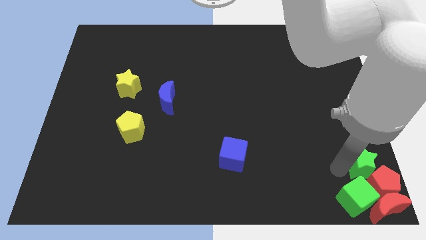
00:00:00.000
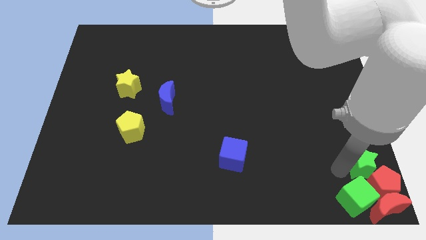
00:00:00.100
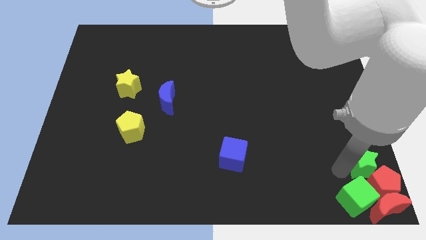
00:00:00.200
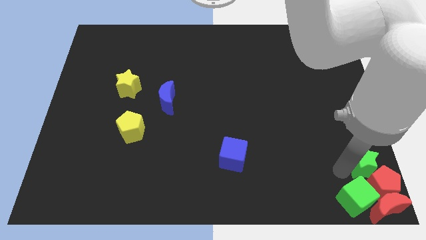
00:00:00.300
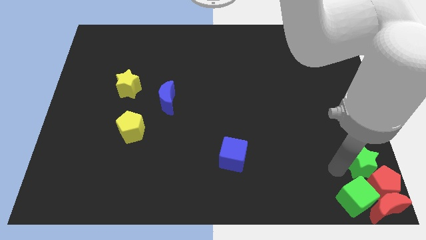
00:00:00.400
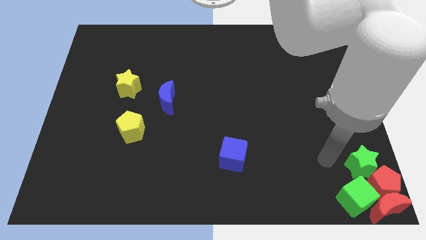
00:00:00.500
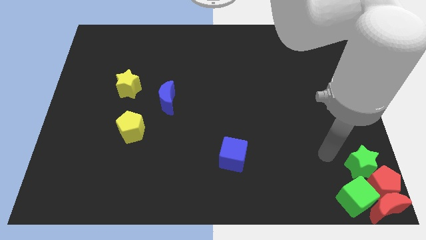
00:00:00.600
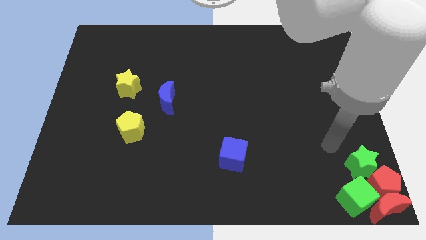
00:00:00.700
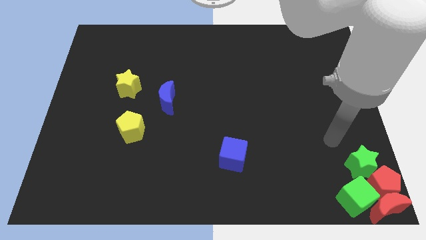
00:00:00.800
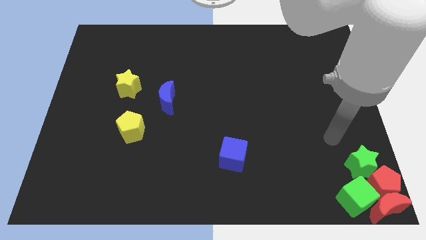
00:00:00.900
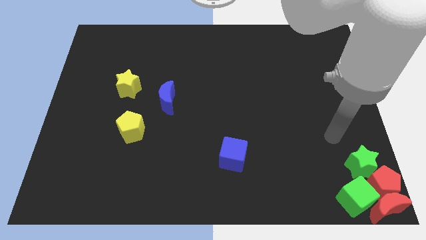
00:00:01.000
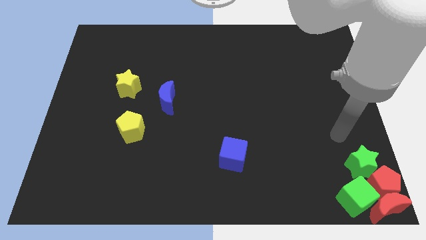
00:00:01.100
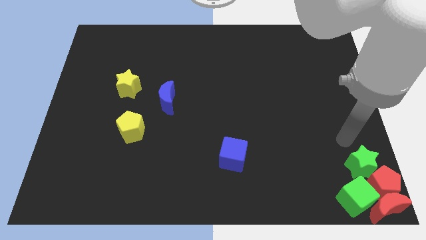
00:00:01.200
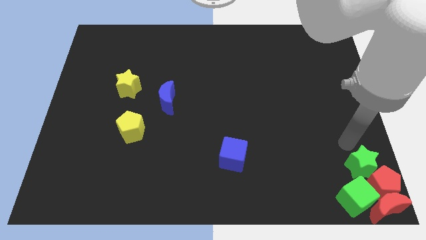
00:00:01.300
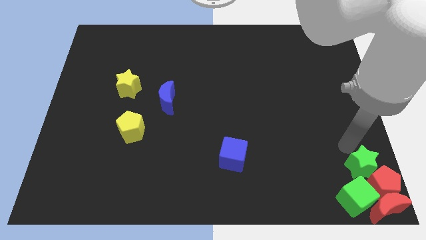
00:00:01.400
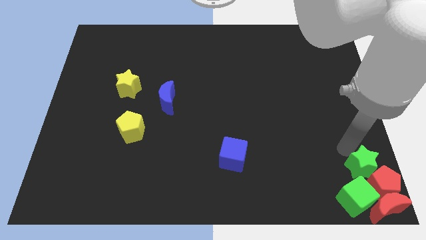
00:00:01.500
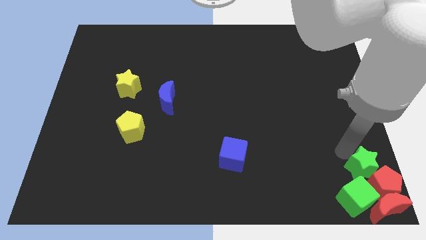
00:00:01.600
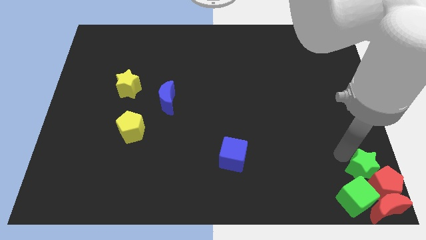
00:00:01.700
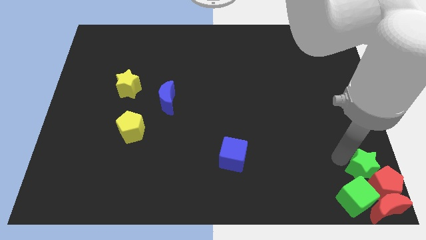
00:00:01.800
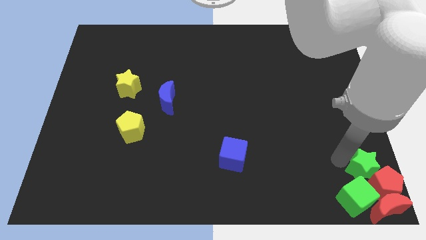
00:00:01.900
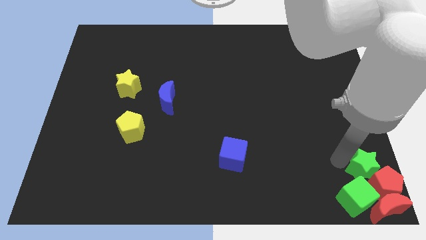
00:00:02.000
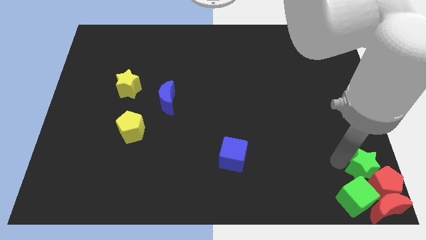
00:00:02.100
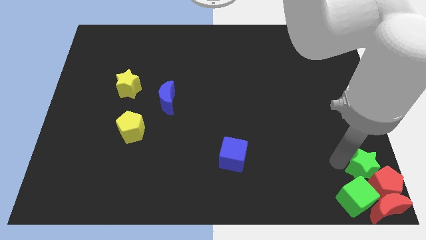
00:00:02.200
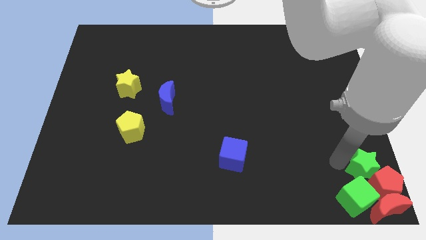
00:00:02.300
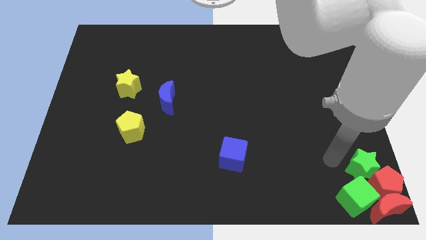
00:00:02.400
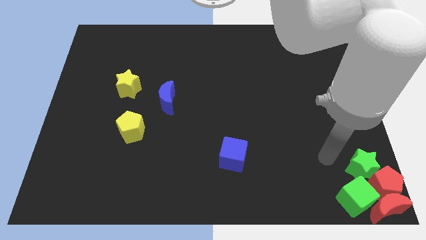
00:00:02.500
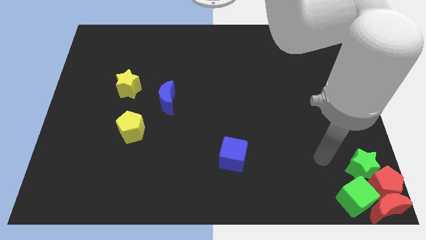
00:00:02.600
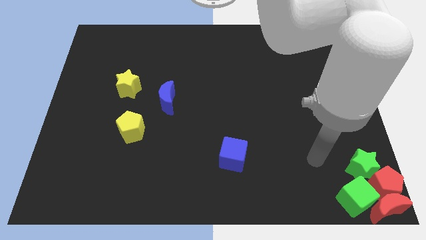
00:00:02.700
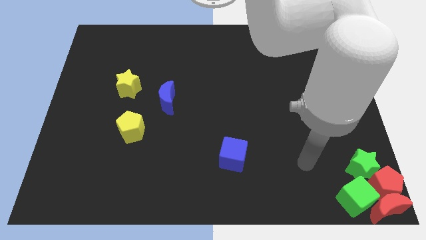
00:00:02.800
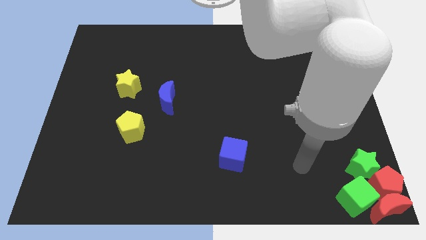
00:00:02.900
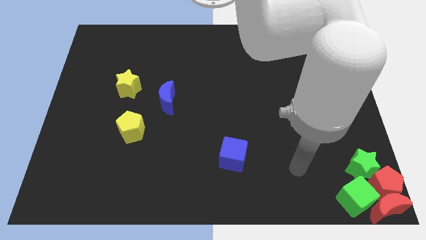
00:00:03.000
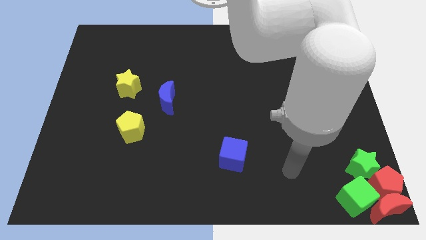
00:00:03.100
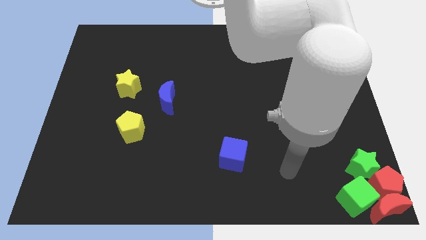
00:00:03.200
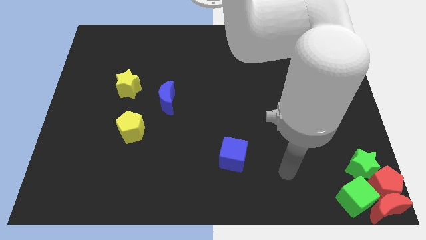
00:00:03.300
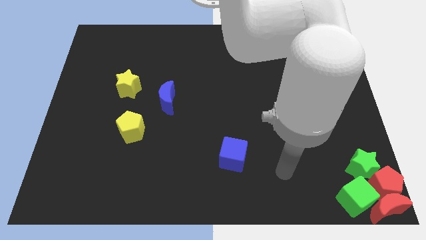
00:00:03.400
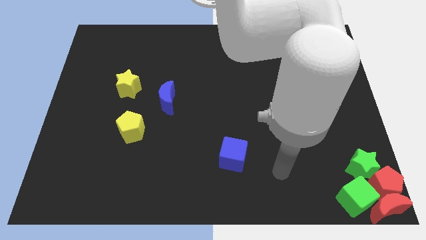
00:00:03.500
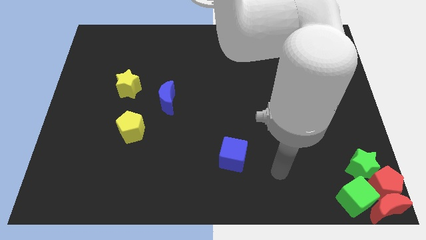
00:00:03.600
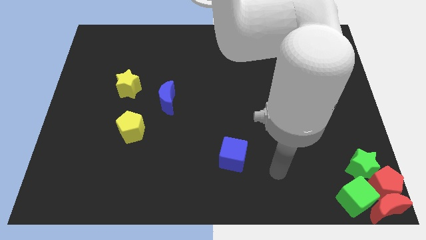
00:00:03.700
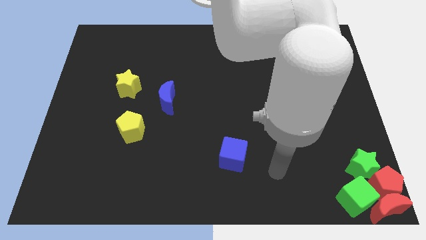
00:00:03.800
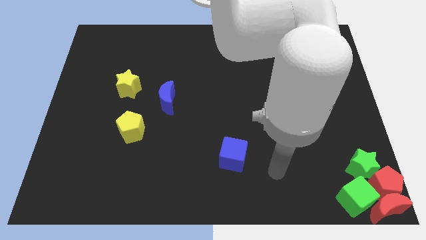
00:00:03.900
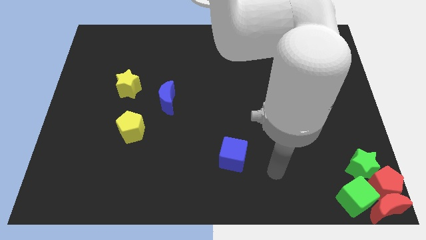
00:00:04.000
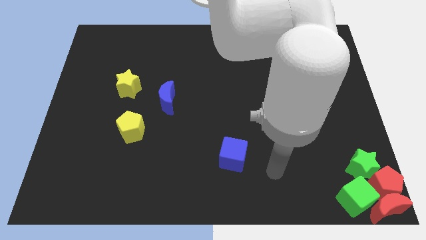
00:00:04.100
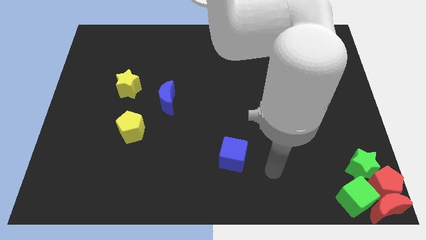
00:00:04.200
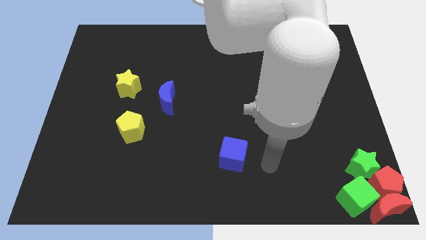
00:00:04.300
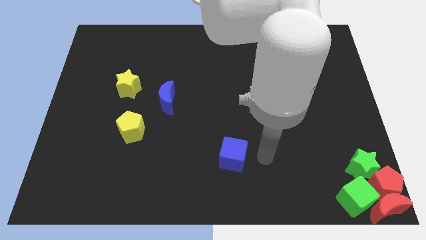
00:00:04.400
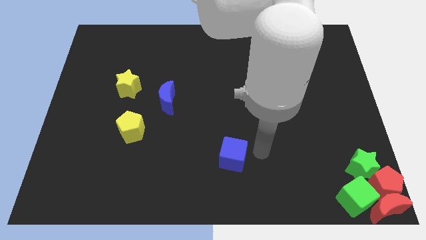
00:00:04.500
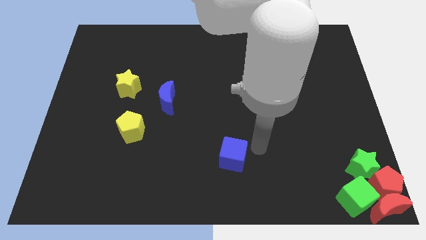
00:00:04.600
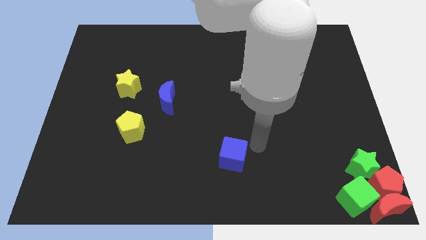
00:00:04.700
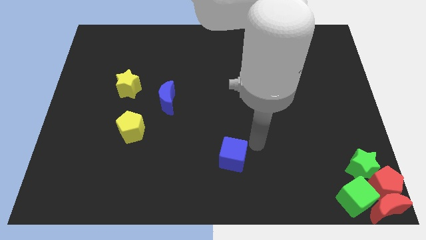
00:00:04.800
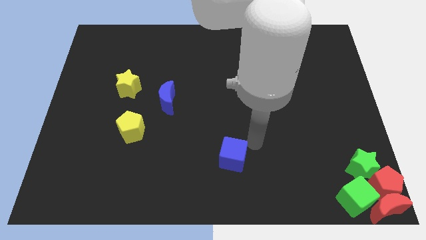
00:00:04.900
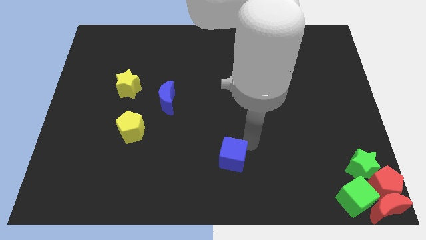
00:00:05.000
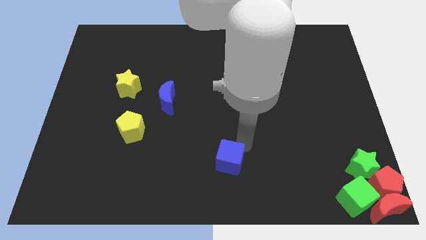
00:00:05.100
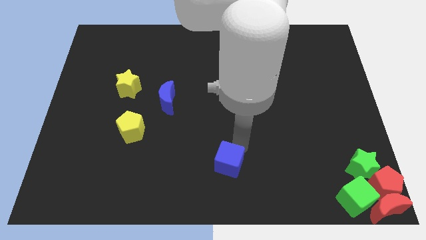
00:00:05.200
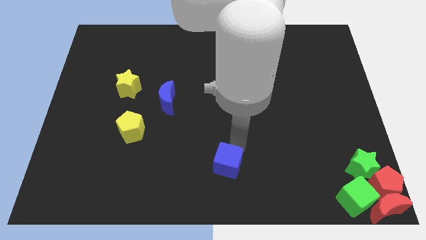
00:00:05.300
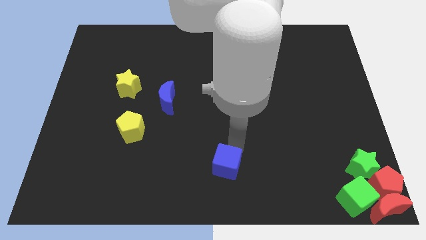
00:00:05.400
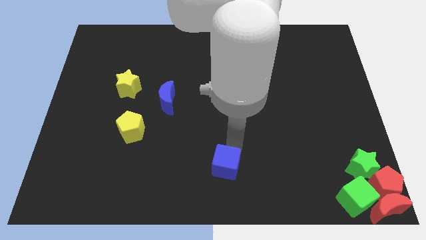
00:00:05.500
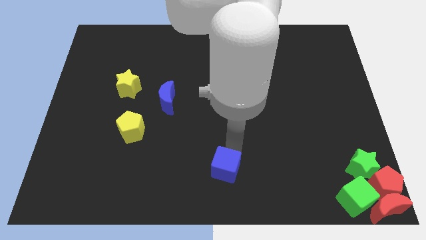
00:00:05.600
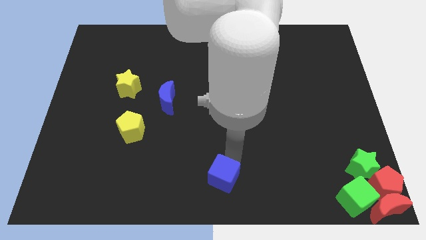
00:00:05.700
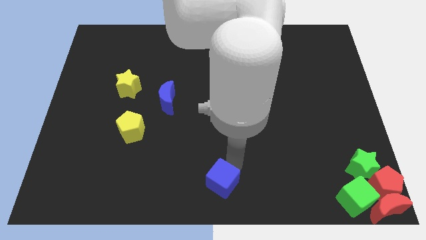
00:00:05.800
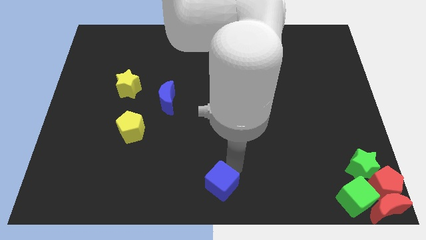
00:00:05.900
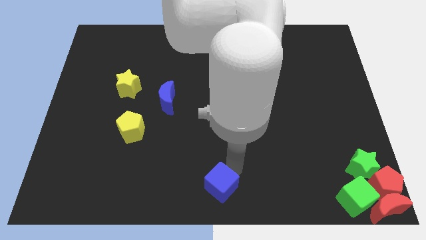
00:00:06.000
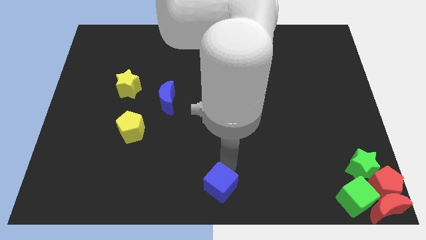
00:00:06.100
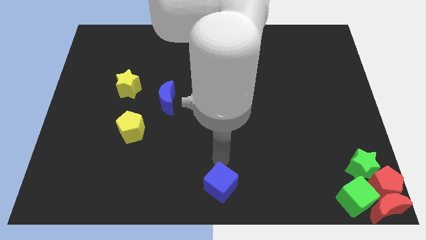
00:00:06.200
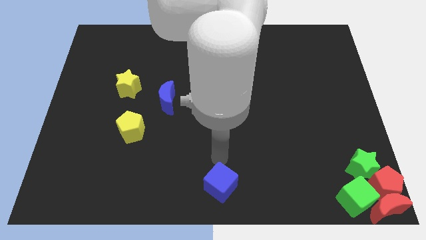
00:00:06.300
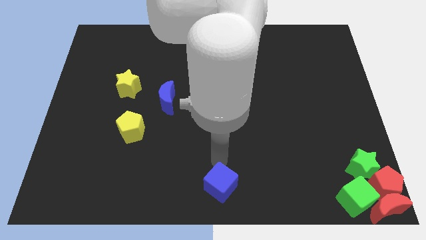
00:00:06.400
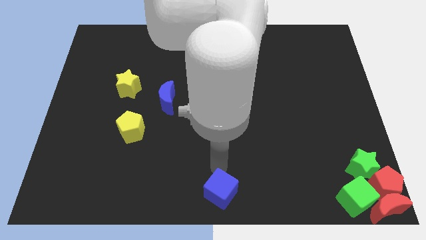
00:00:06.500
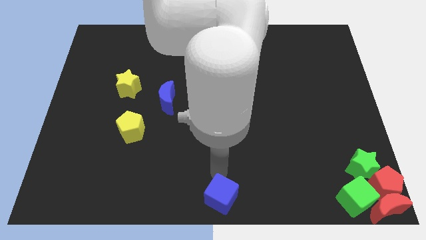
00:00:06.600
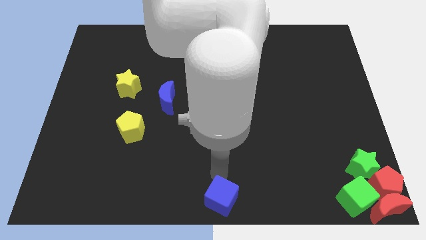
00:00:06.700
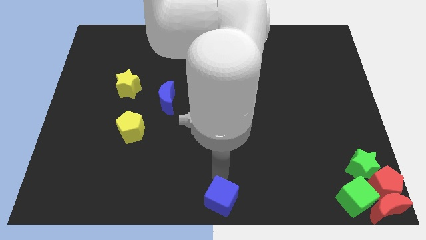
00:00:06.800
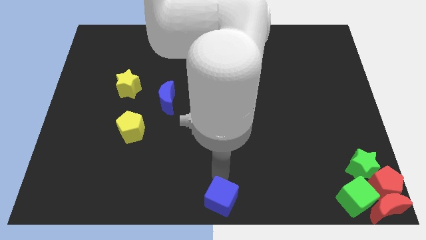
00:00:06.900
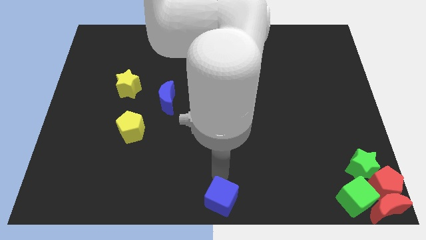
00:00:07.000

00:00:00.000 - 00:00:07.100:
move the blue cube to the center bottom of the board

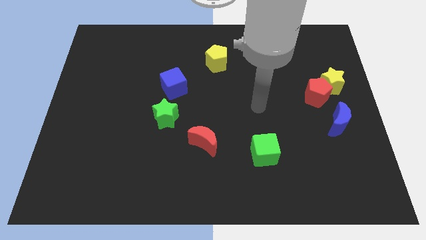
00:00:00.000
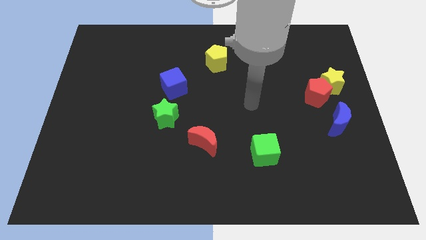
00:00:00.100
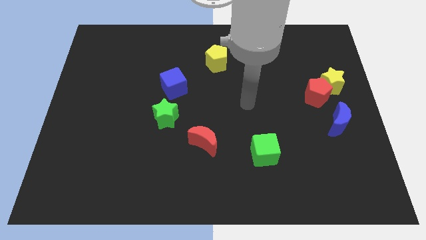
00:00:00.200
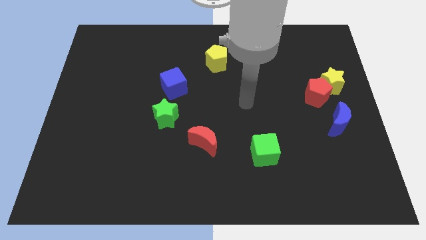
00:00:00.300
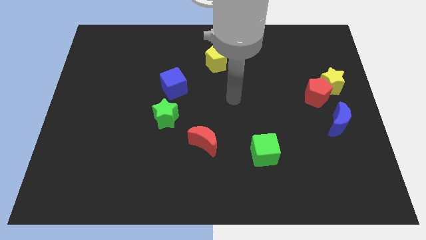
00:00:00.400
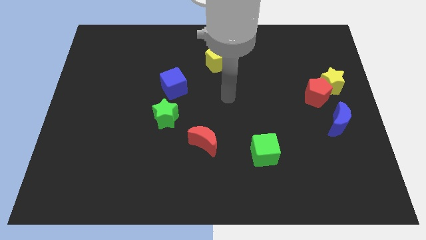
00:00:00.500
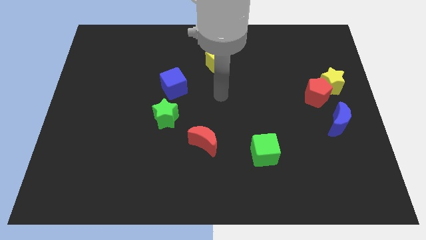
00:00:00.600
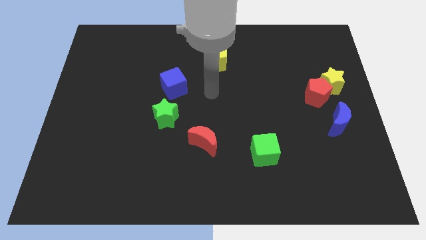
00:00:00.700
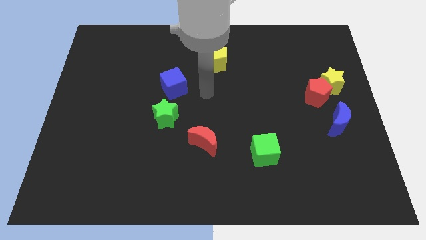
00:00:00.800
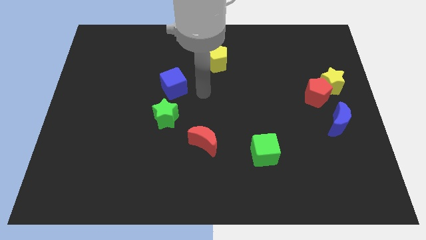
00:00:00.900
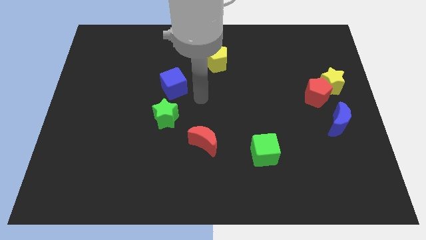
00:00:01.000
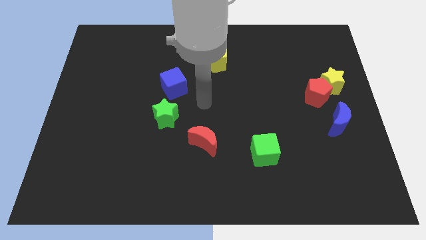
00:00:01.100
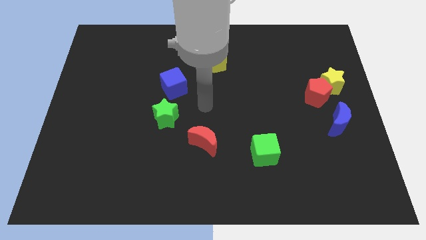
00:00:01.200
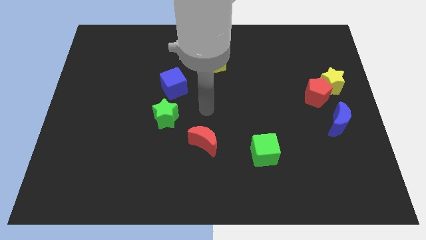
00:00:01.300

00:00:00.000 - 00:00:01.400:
go and point your arm above the red crescent

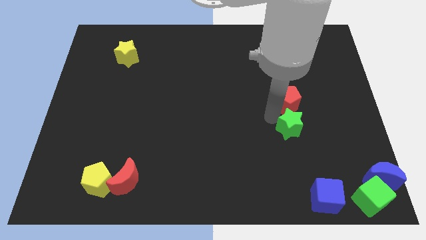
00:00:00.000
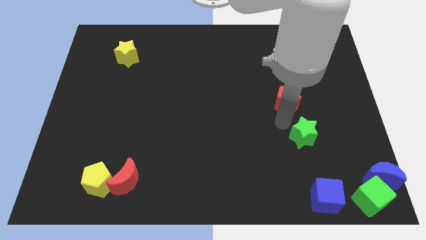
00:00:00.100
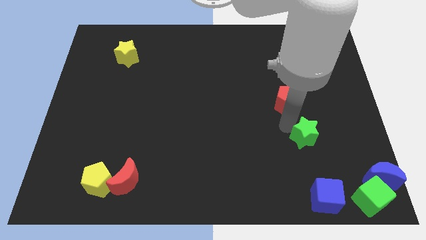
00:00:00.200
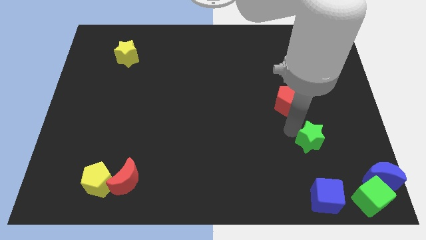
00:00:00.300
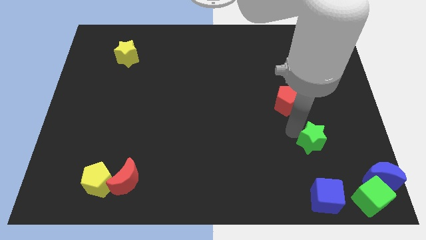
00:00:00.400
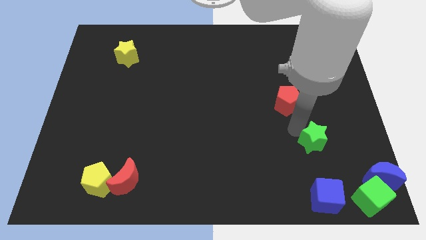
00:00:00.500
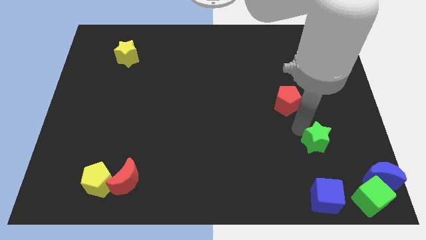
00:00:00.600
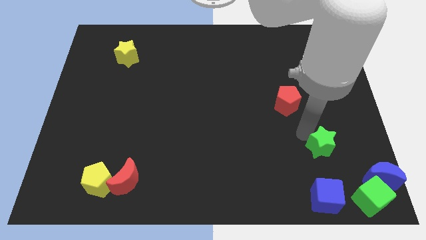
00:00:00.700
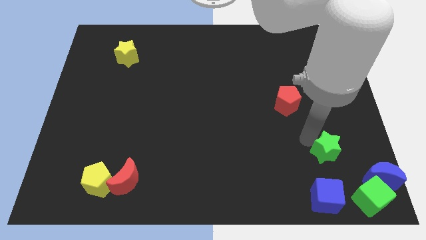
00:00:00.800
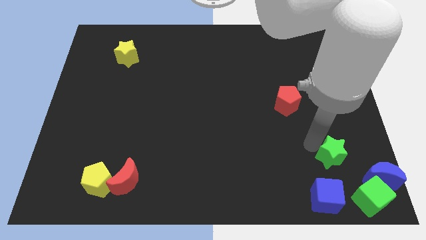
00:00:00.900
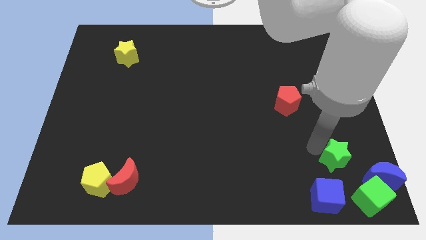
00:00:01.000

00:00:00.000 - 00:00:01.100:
separate green star from red pentagon
